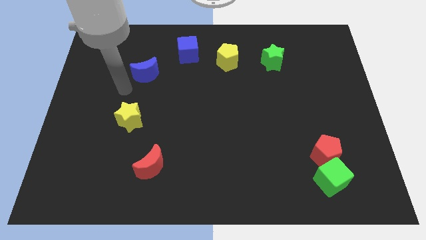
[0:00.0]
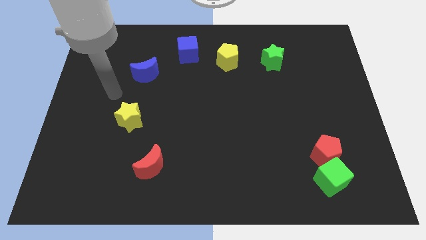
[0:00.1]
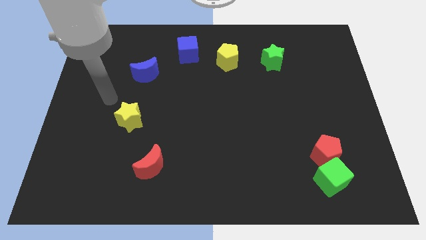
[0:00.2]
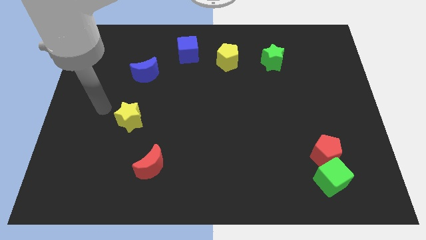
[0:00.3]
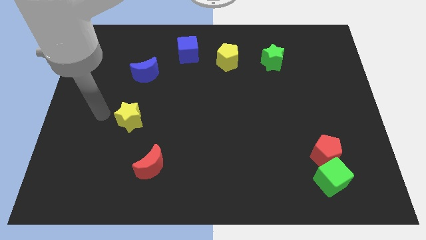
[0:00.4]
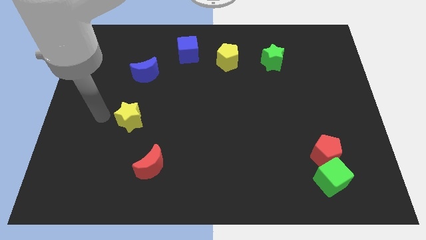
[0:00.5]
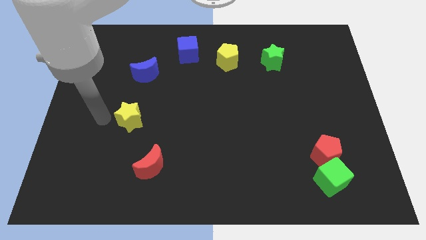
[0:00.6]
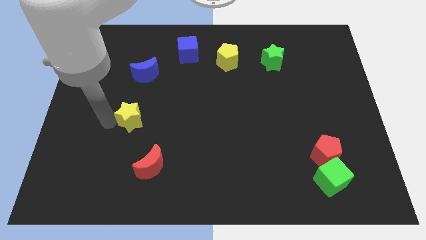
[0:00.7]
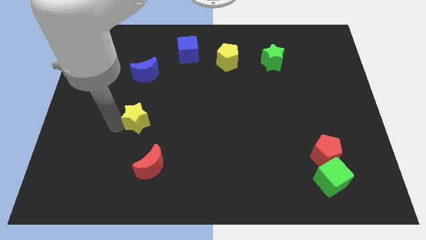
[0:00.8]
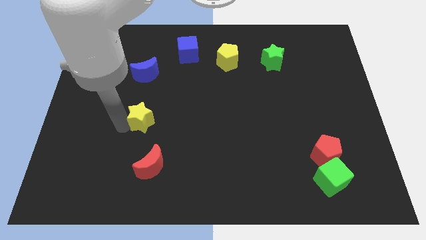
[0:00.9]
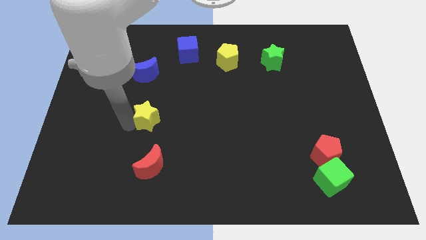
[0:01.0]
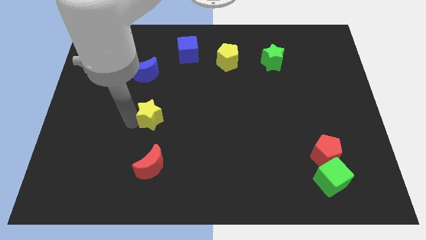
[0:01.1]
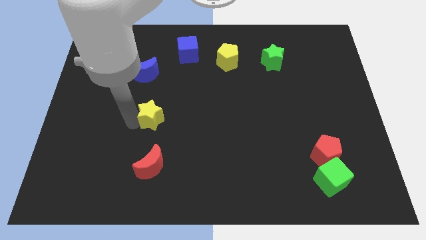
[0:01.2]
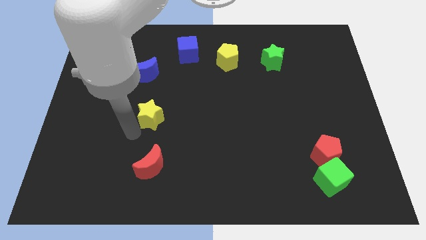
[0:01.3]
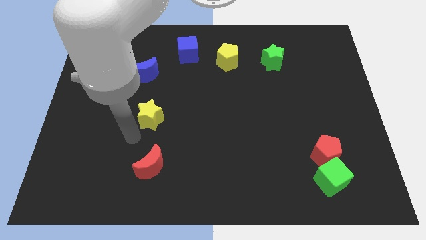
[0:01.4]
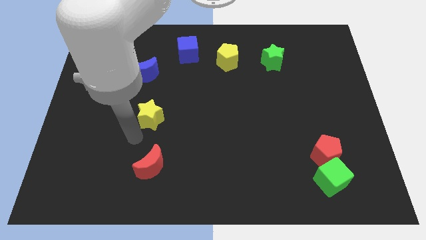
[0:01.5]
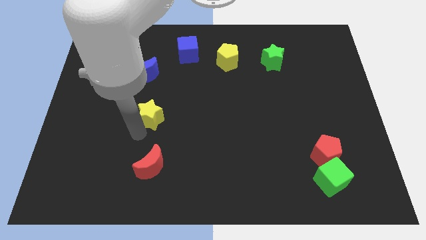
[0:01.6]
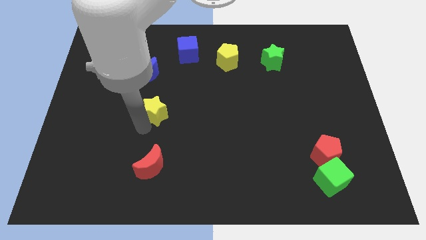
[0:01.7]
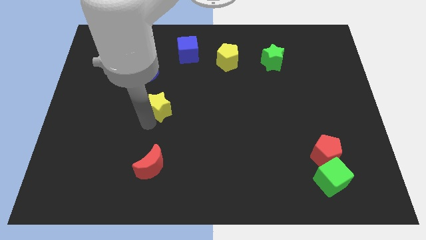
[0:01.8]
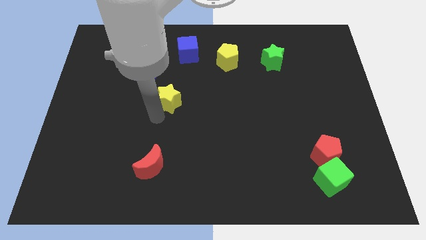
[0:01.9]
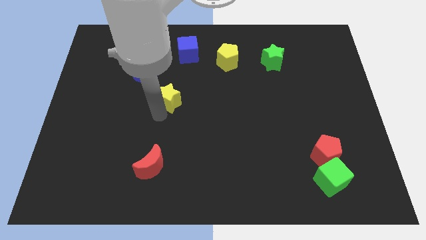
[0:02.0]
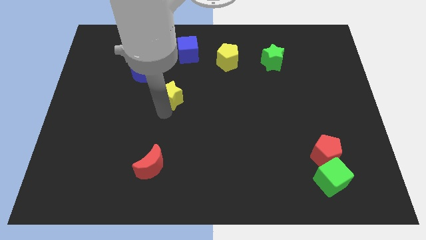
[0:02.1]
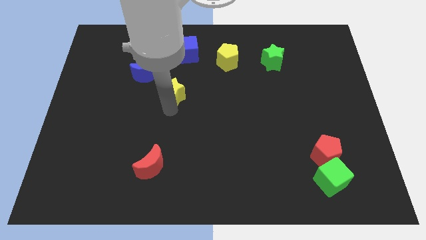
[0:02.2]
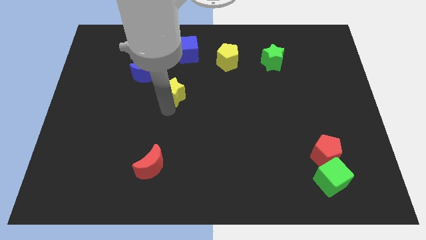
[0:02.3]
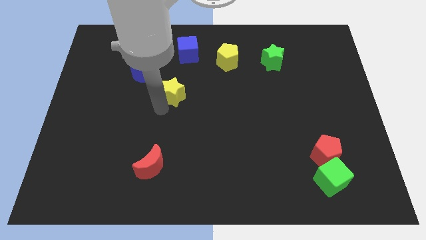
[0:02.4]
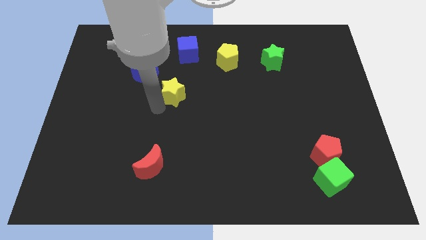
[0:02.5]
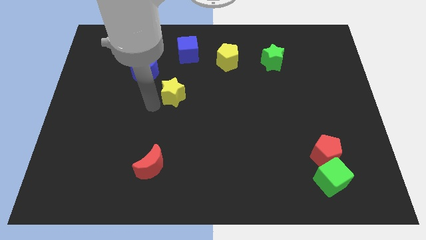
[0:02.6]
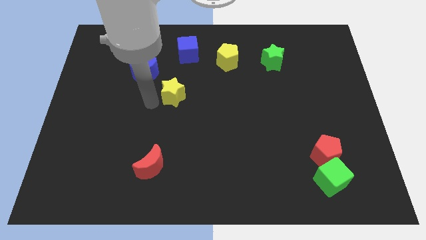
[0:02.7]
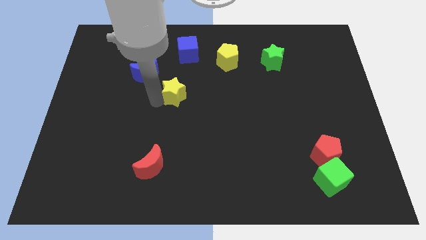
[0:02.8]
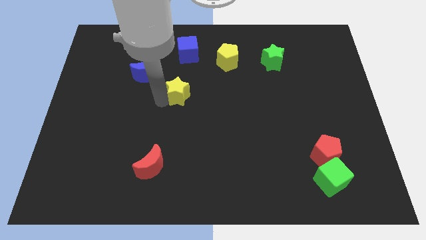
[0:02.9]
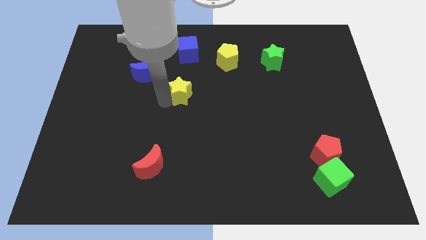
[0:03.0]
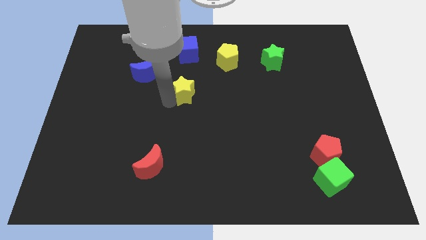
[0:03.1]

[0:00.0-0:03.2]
push the yellow star to the center

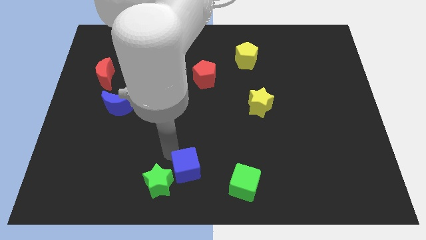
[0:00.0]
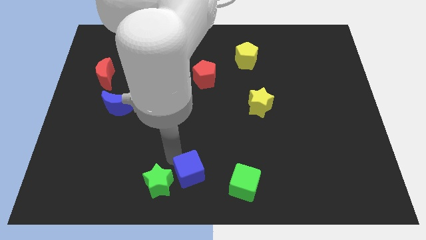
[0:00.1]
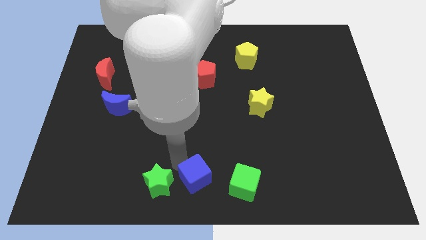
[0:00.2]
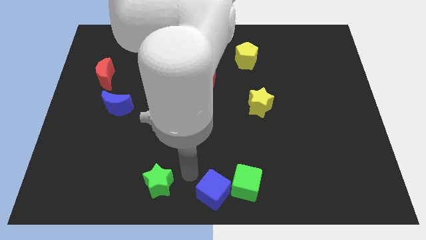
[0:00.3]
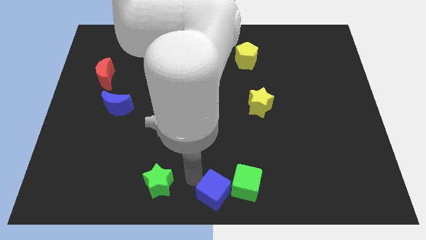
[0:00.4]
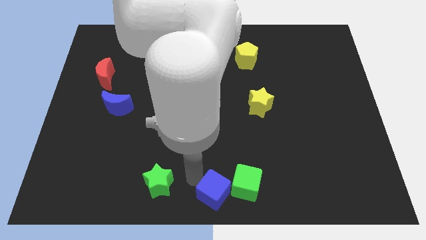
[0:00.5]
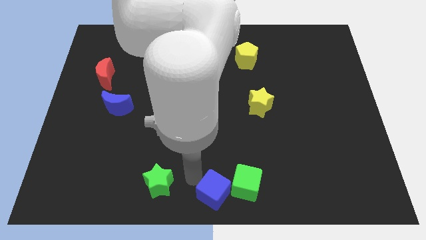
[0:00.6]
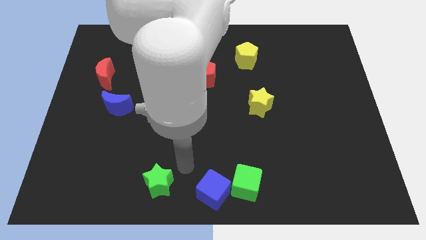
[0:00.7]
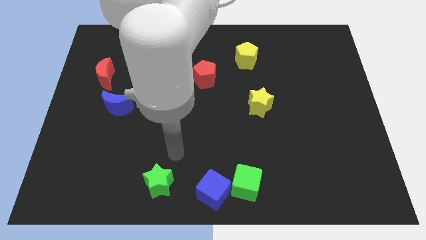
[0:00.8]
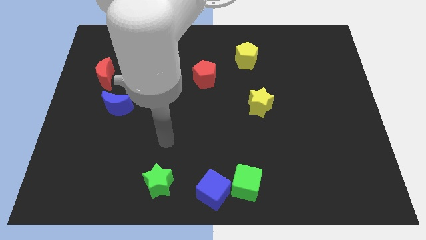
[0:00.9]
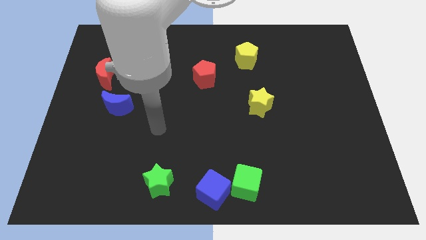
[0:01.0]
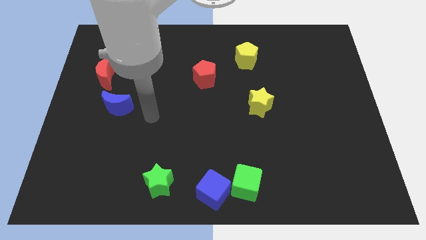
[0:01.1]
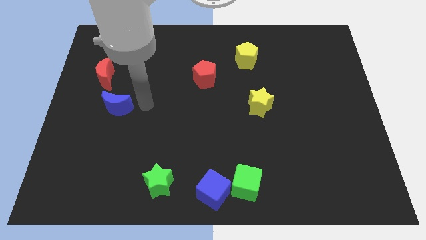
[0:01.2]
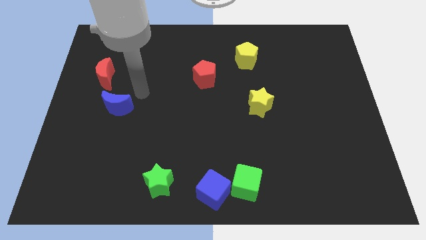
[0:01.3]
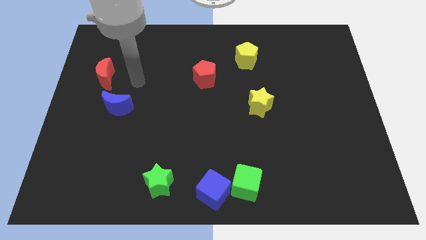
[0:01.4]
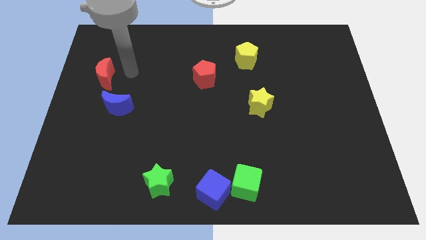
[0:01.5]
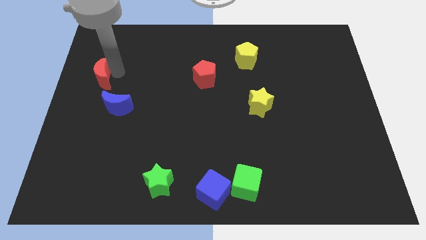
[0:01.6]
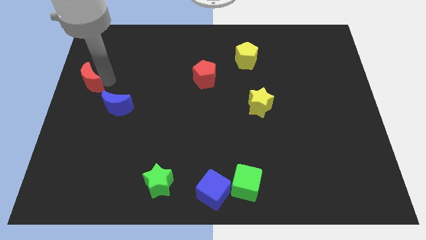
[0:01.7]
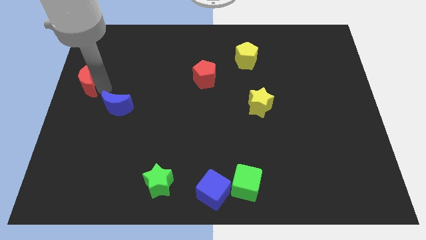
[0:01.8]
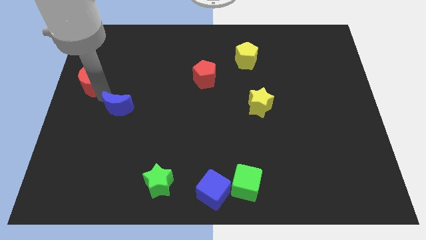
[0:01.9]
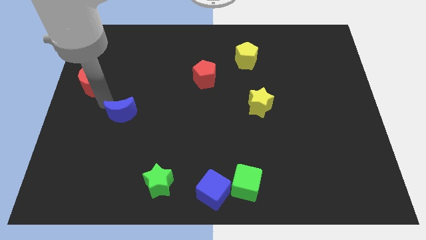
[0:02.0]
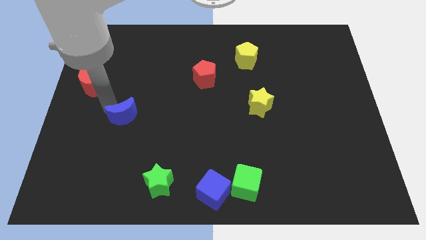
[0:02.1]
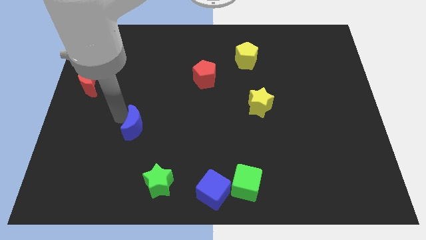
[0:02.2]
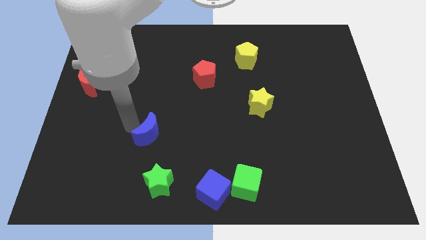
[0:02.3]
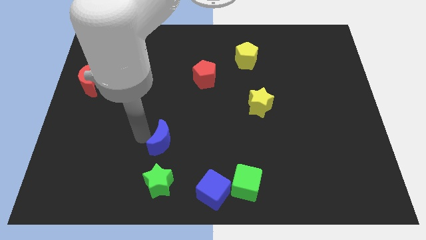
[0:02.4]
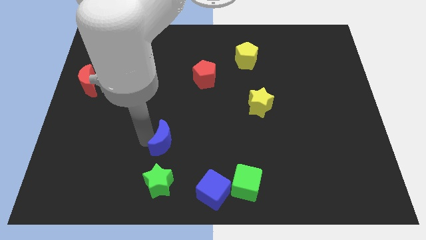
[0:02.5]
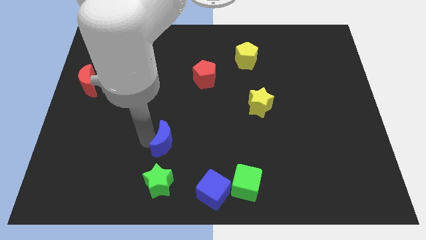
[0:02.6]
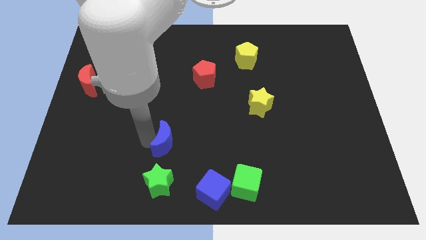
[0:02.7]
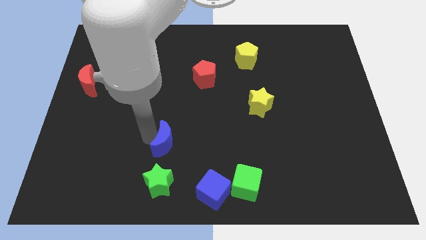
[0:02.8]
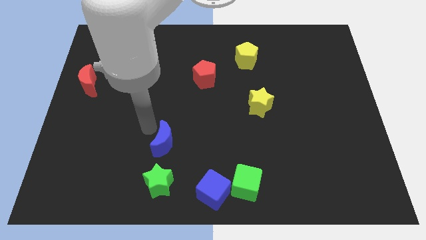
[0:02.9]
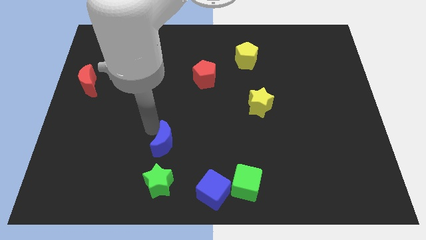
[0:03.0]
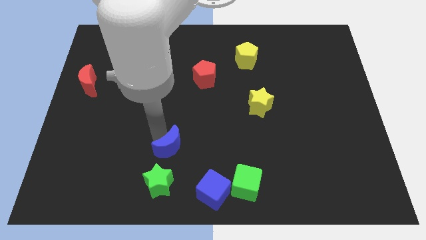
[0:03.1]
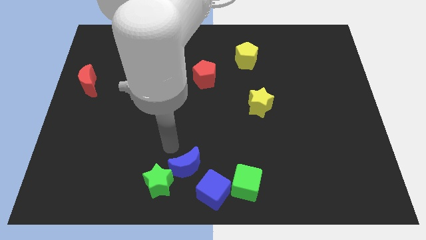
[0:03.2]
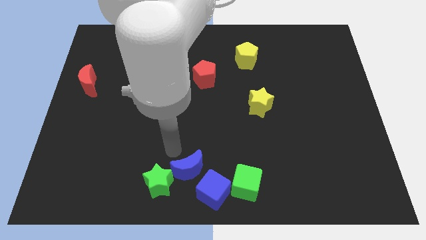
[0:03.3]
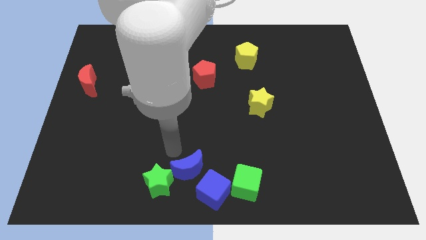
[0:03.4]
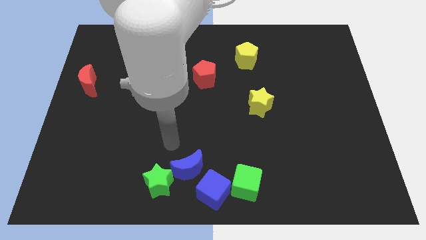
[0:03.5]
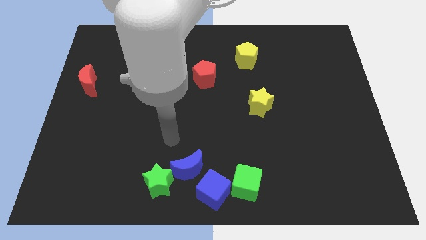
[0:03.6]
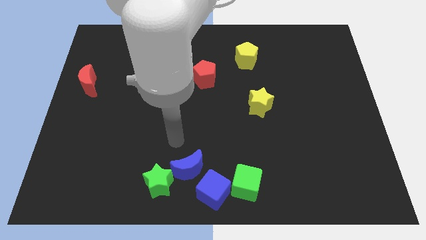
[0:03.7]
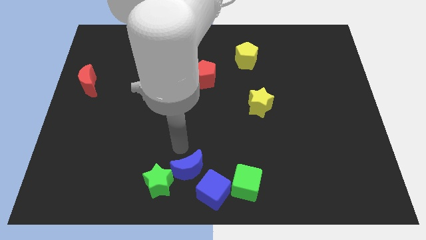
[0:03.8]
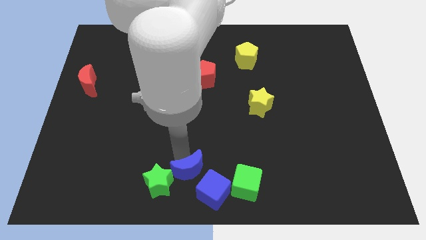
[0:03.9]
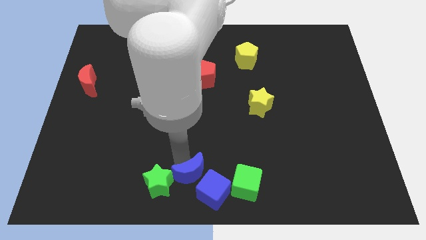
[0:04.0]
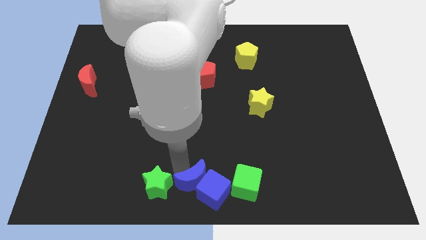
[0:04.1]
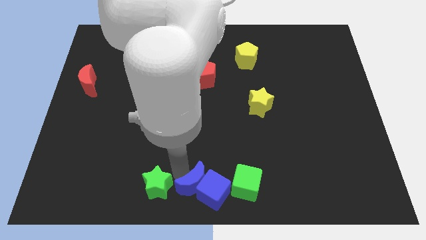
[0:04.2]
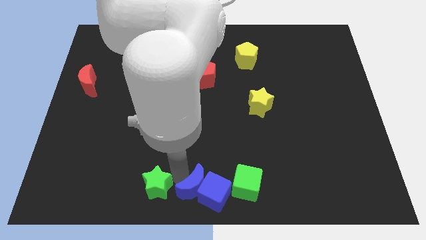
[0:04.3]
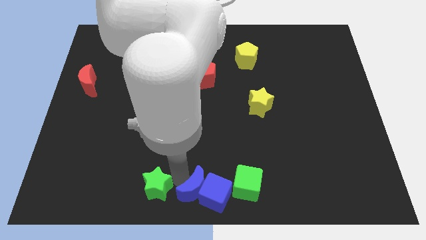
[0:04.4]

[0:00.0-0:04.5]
place the blue blocks between the green blocks

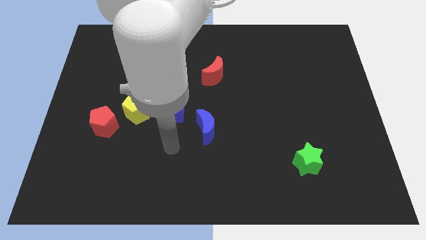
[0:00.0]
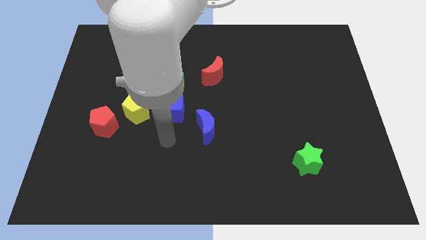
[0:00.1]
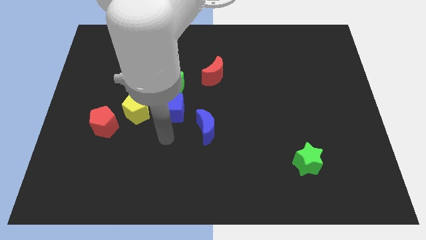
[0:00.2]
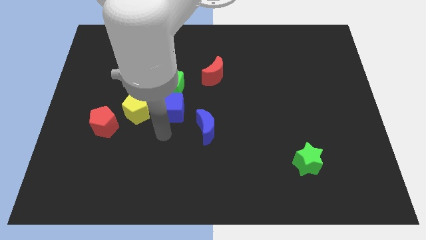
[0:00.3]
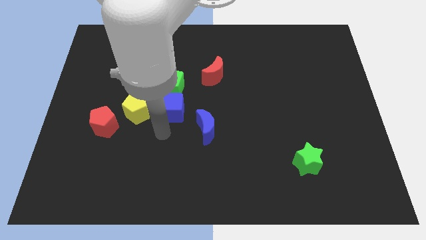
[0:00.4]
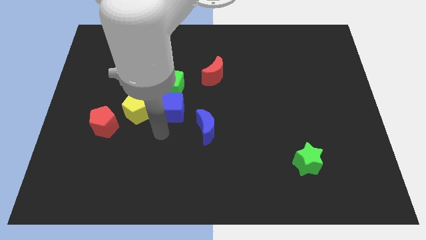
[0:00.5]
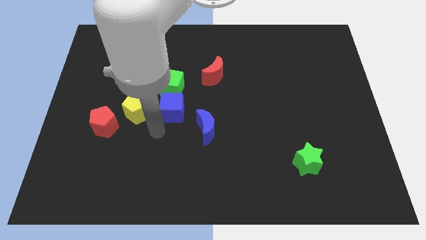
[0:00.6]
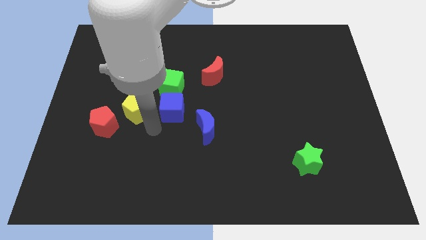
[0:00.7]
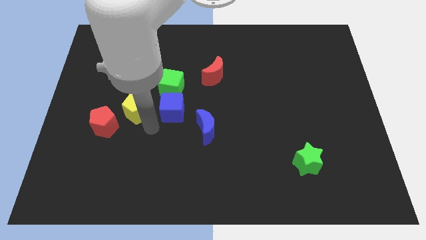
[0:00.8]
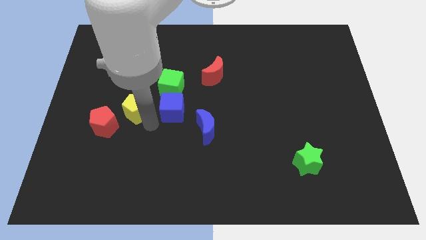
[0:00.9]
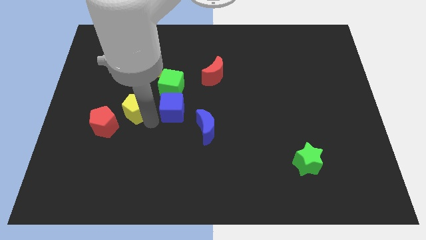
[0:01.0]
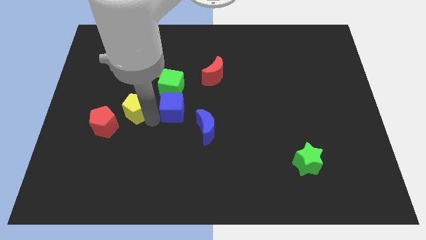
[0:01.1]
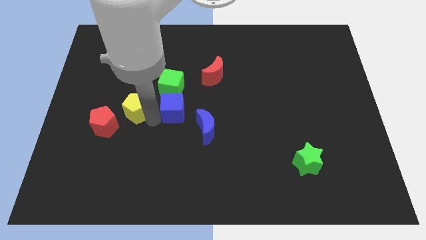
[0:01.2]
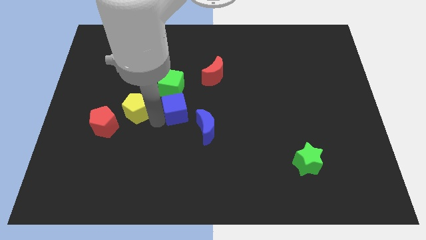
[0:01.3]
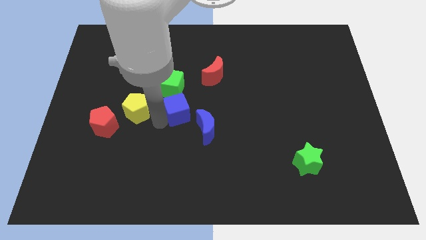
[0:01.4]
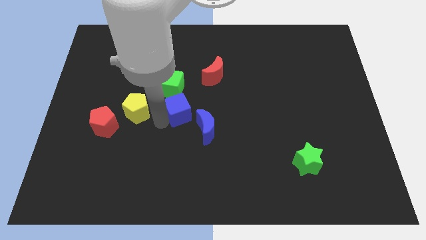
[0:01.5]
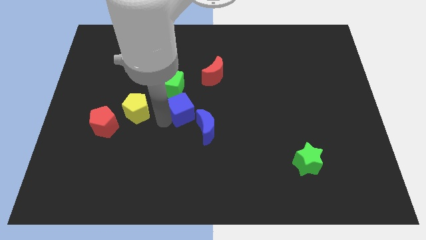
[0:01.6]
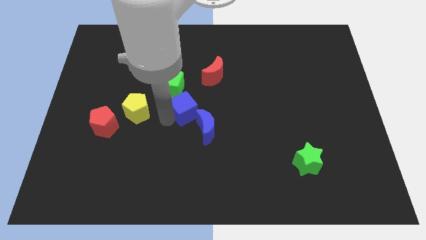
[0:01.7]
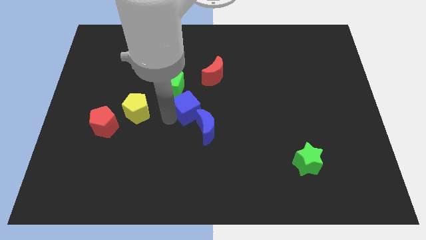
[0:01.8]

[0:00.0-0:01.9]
slide the blue cube to the top side of the blue moon
